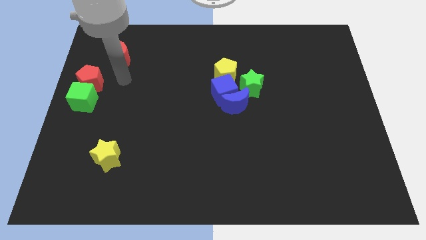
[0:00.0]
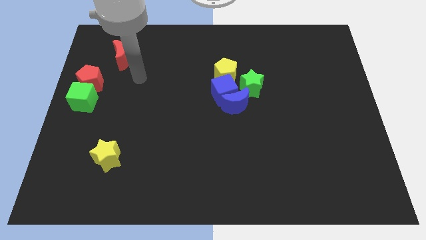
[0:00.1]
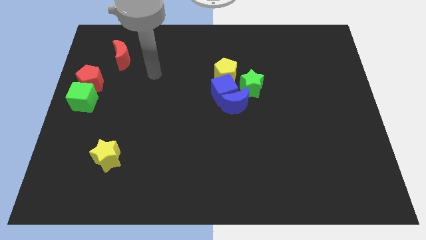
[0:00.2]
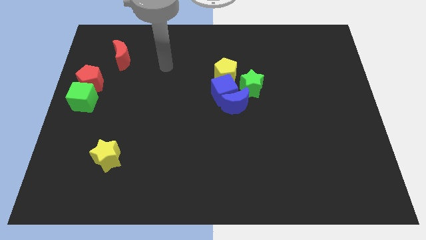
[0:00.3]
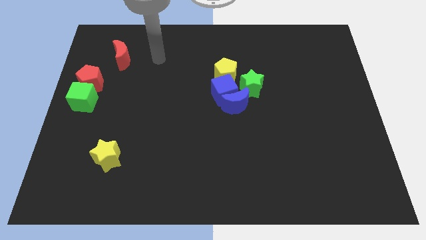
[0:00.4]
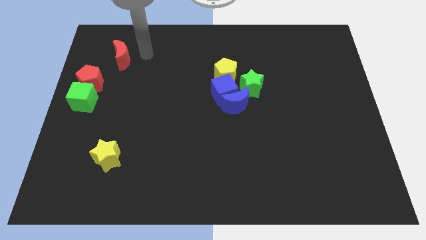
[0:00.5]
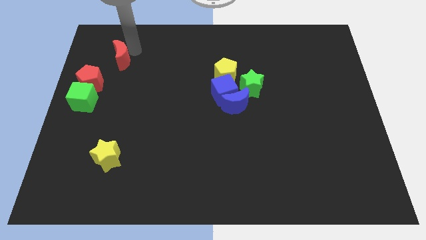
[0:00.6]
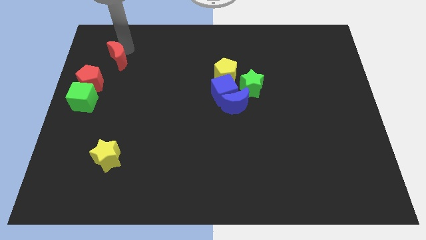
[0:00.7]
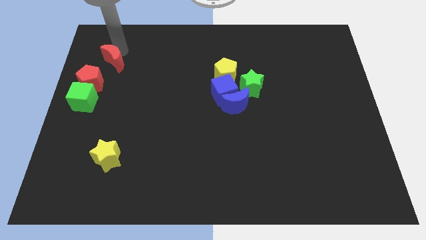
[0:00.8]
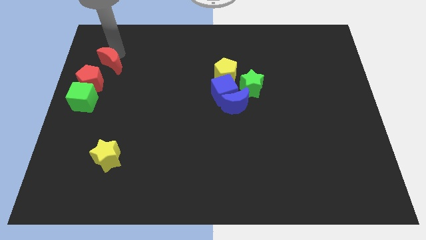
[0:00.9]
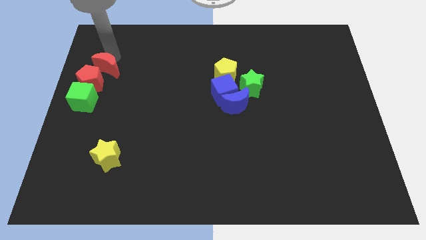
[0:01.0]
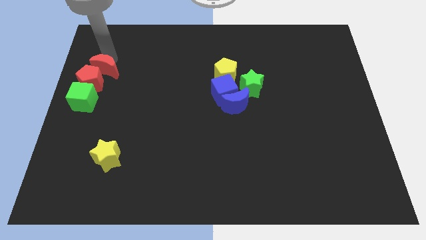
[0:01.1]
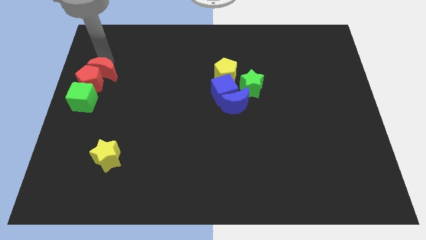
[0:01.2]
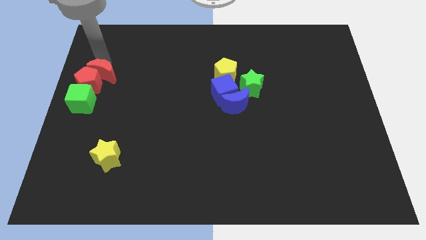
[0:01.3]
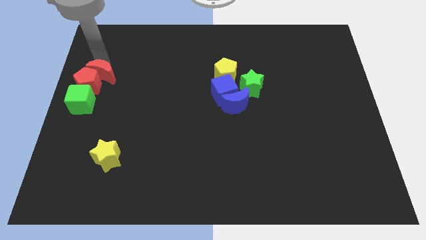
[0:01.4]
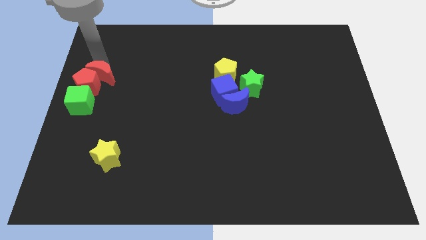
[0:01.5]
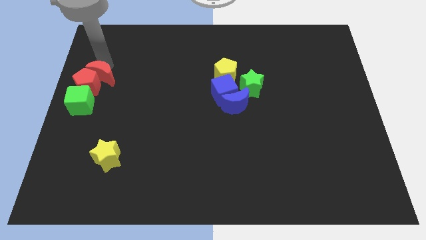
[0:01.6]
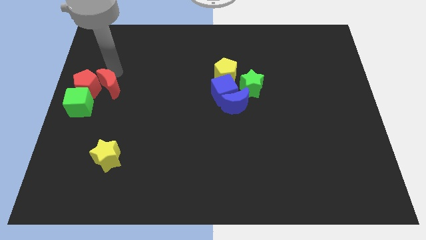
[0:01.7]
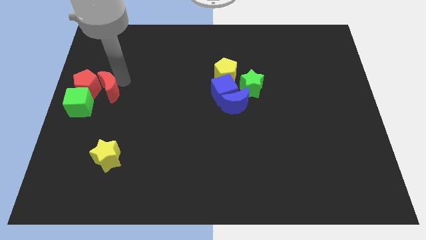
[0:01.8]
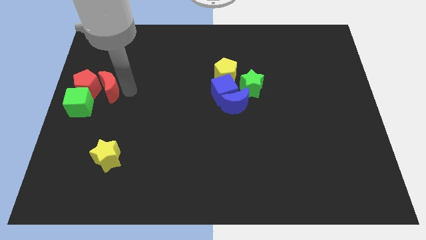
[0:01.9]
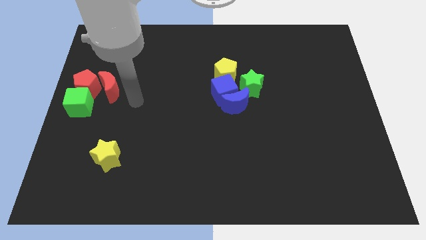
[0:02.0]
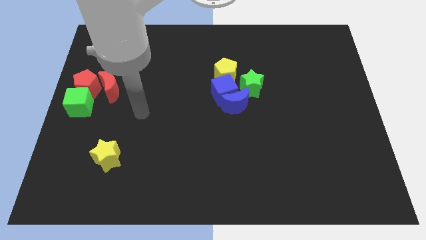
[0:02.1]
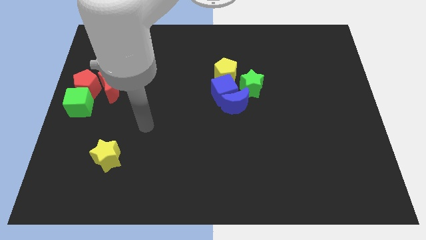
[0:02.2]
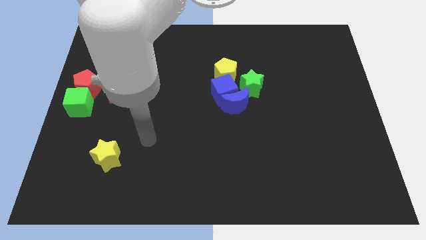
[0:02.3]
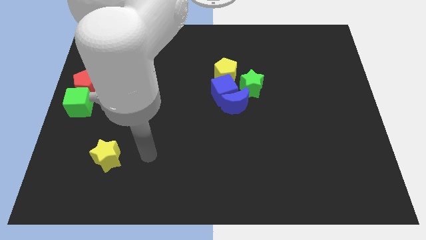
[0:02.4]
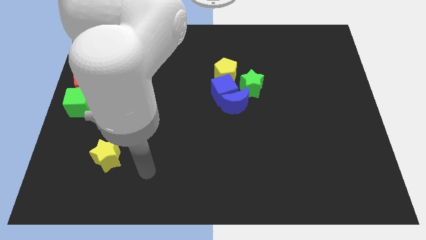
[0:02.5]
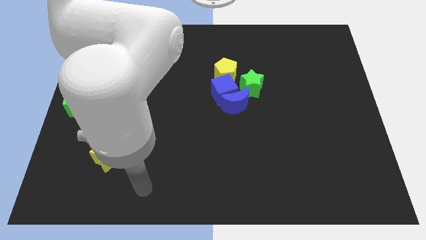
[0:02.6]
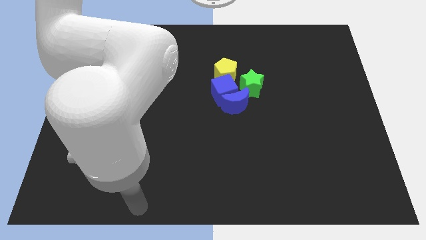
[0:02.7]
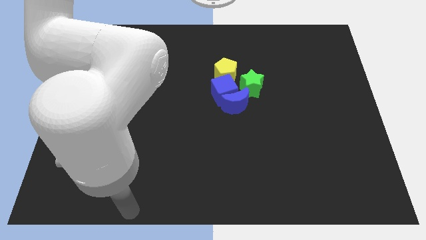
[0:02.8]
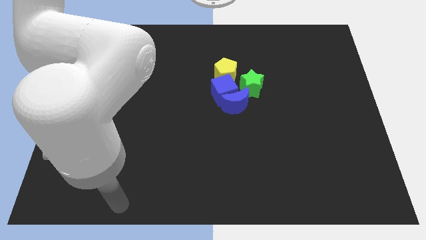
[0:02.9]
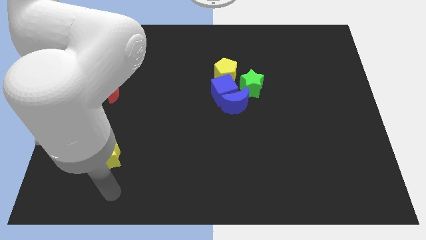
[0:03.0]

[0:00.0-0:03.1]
slide the red crescent into the red pentagon

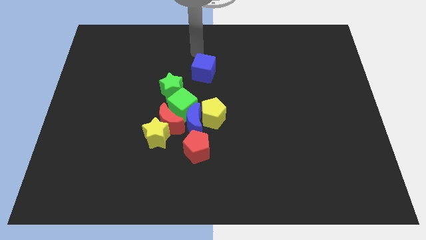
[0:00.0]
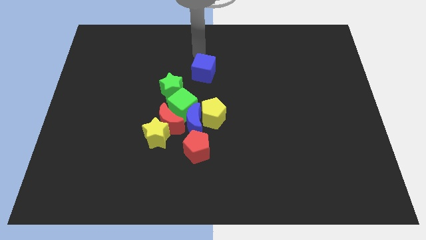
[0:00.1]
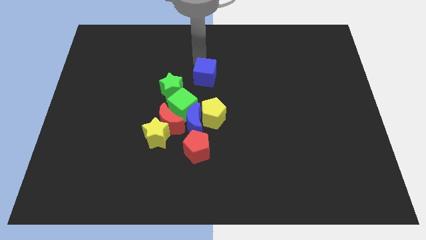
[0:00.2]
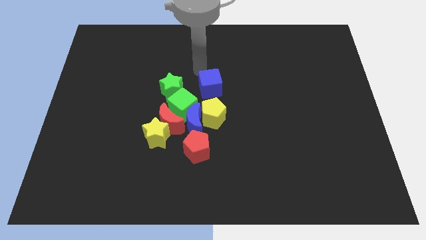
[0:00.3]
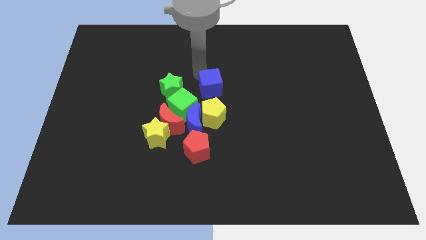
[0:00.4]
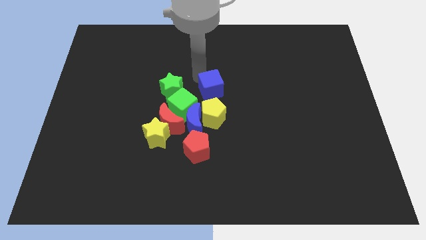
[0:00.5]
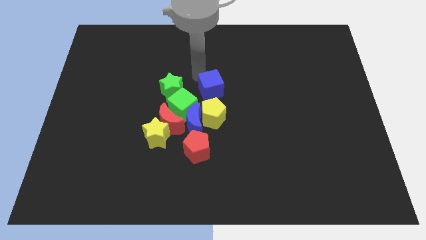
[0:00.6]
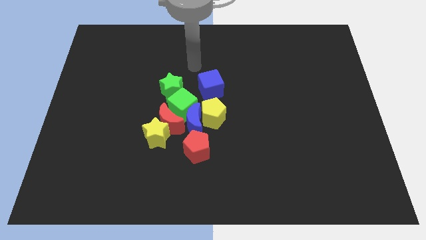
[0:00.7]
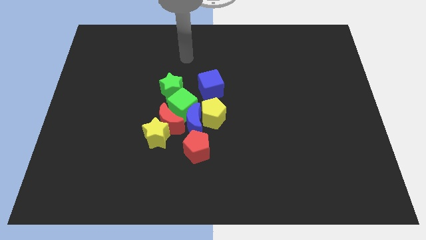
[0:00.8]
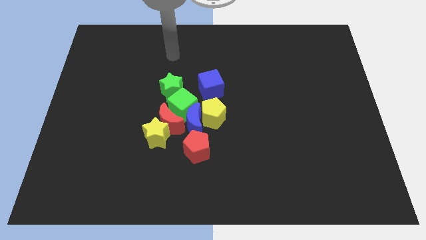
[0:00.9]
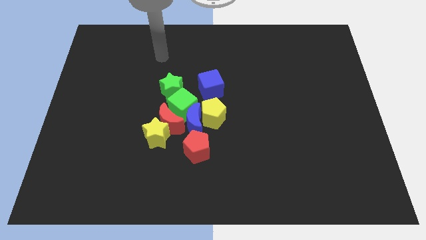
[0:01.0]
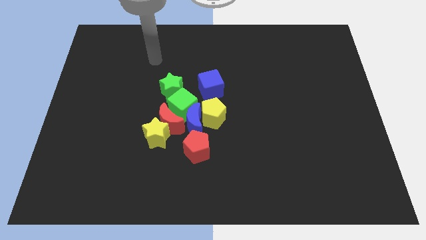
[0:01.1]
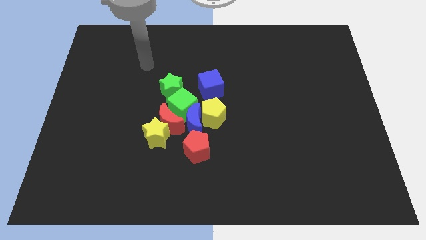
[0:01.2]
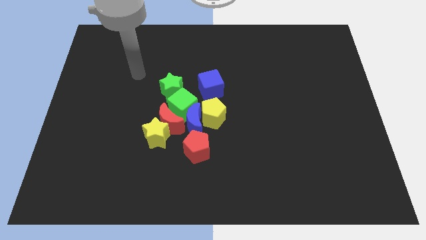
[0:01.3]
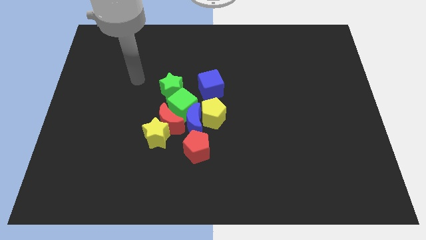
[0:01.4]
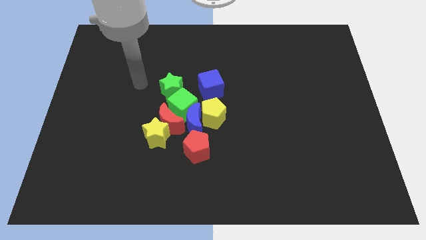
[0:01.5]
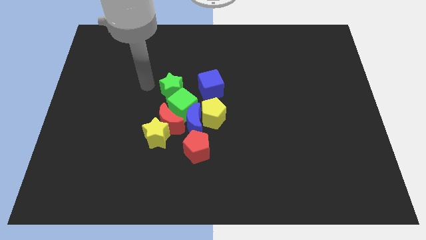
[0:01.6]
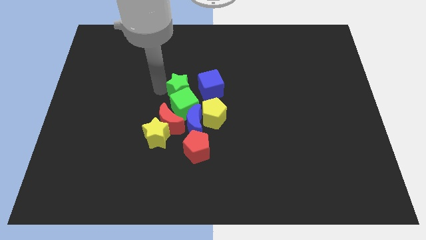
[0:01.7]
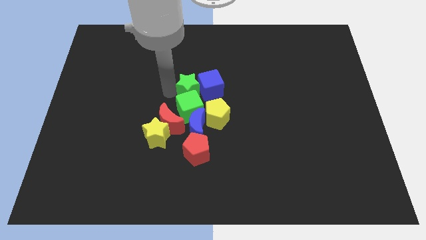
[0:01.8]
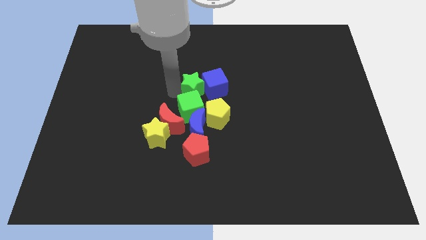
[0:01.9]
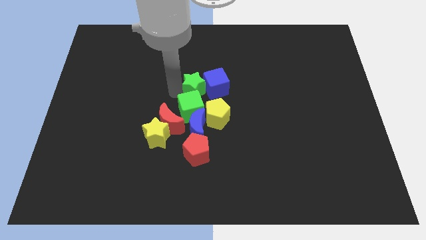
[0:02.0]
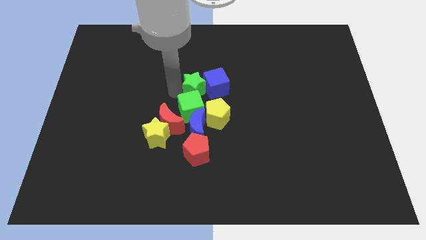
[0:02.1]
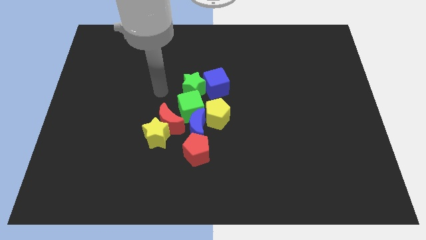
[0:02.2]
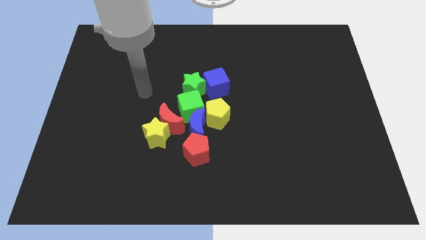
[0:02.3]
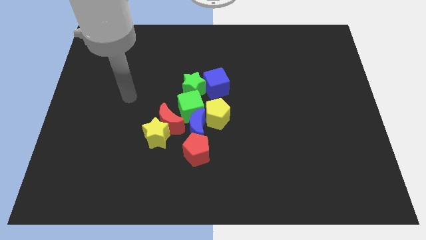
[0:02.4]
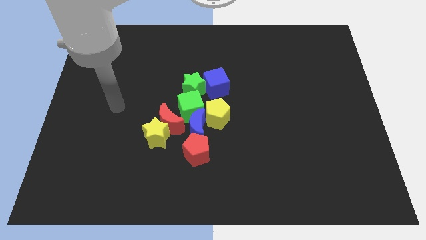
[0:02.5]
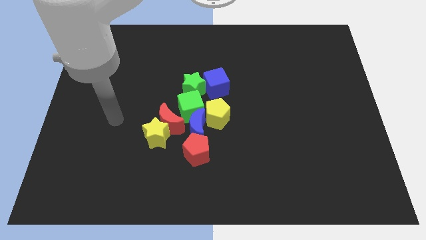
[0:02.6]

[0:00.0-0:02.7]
push the green star left to the blue cube

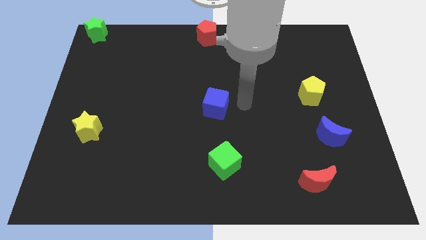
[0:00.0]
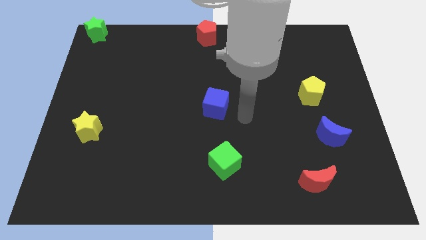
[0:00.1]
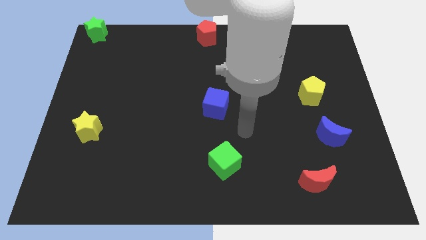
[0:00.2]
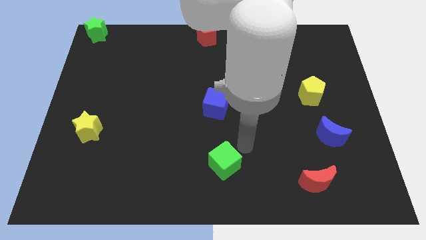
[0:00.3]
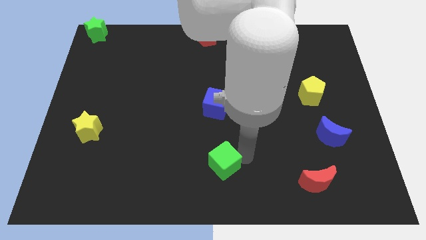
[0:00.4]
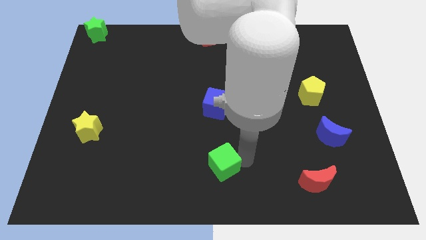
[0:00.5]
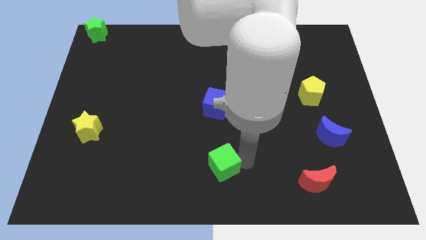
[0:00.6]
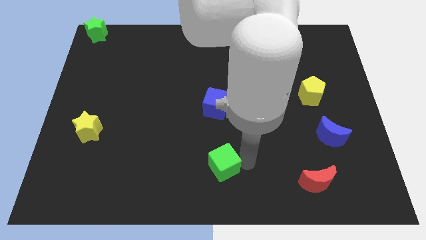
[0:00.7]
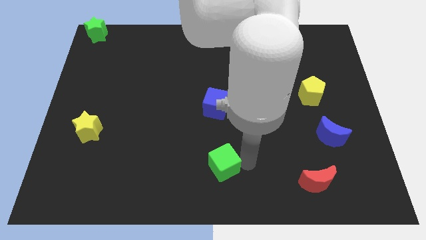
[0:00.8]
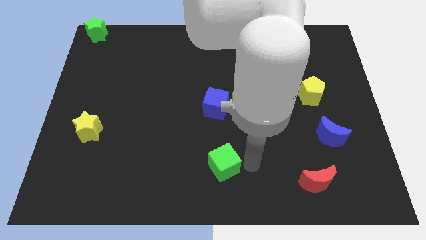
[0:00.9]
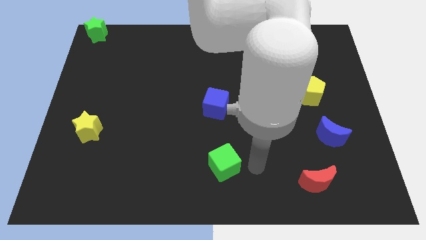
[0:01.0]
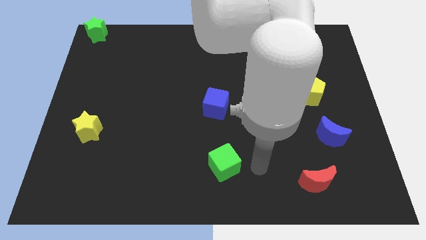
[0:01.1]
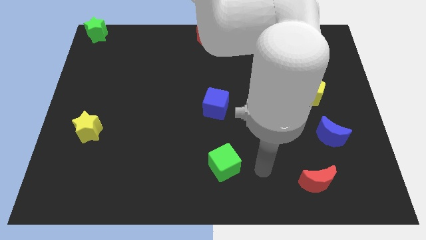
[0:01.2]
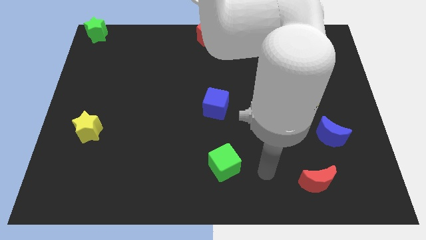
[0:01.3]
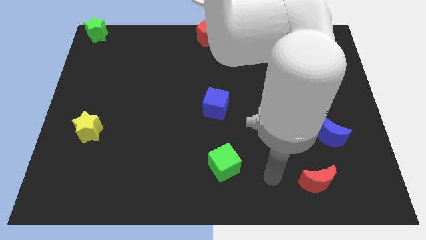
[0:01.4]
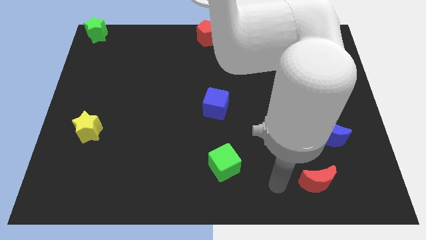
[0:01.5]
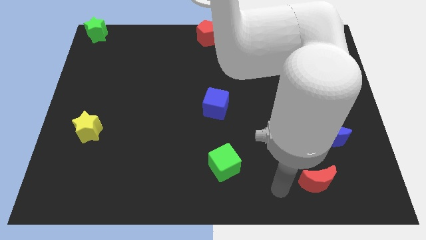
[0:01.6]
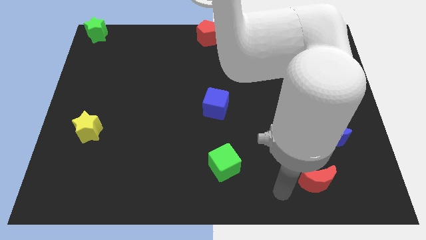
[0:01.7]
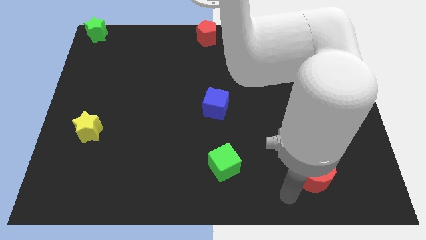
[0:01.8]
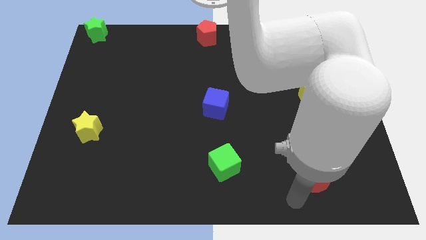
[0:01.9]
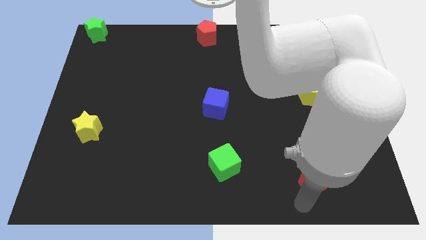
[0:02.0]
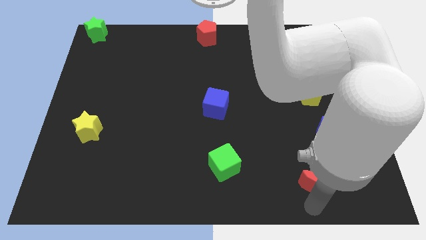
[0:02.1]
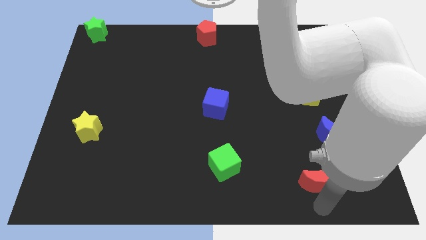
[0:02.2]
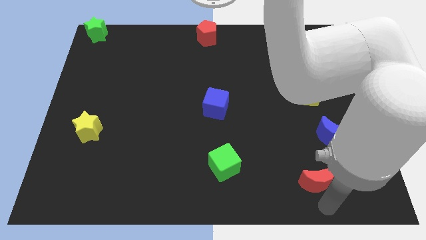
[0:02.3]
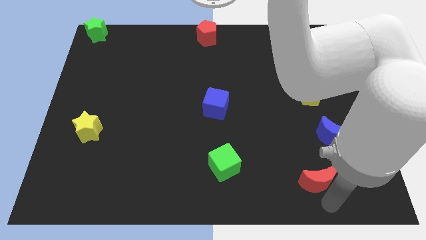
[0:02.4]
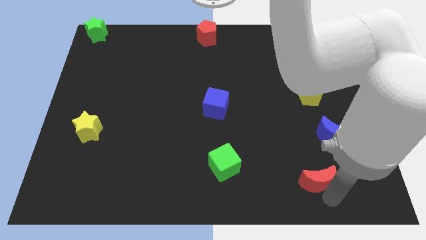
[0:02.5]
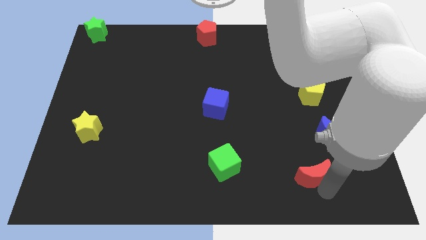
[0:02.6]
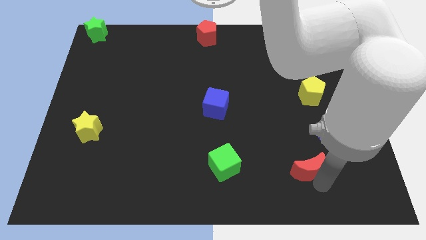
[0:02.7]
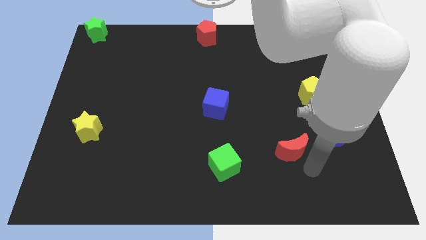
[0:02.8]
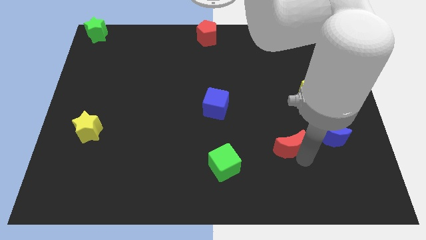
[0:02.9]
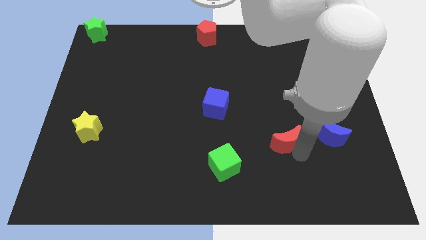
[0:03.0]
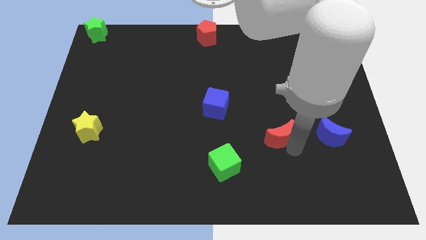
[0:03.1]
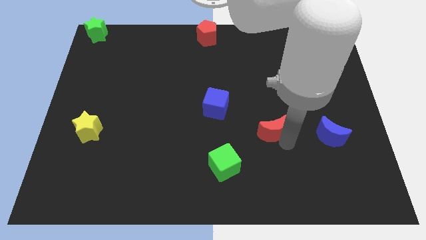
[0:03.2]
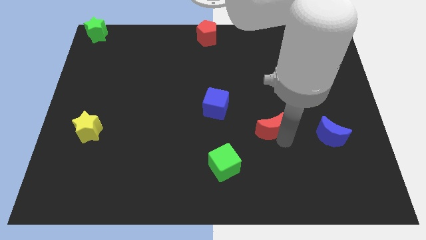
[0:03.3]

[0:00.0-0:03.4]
move red moon upwards
